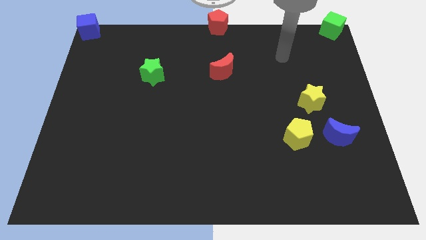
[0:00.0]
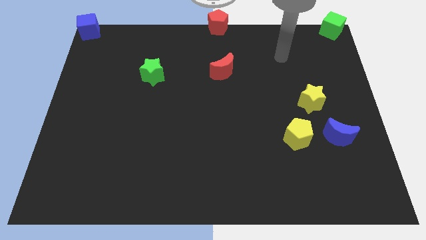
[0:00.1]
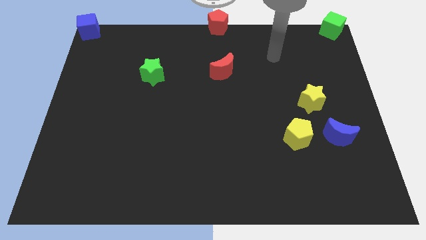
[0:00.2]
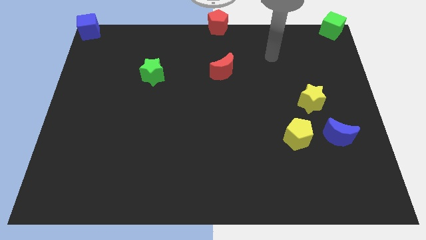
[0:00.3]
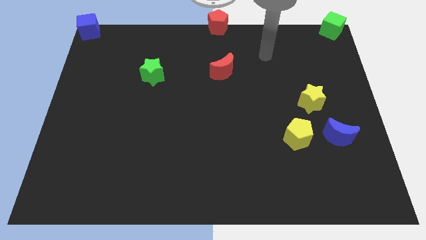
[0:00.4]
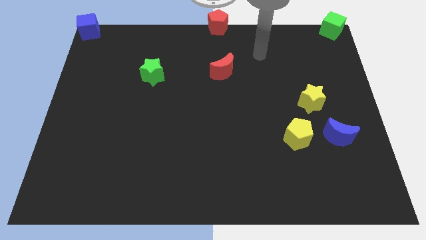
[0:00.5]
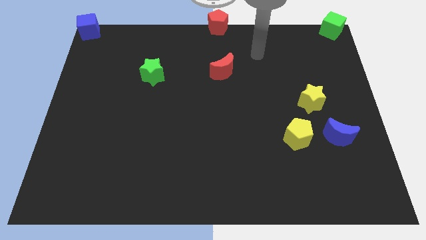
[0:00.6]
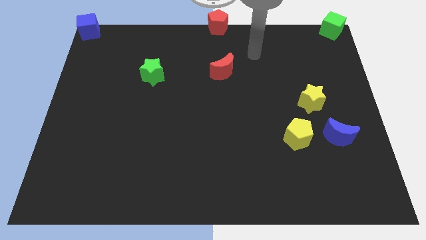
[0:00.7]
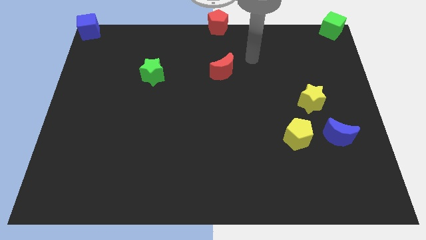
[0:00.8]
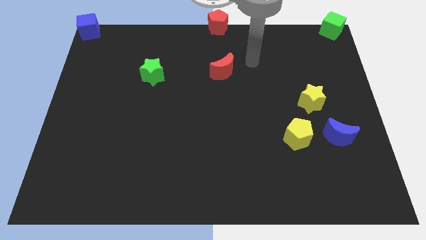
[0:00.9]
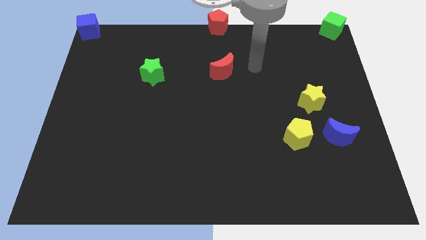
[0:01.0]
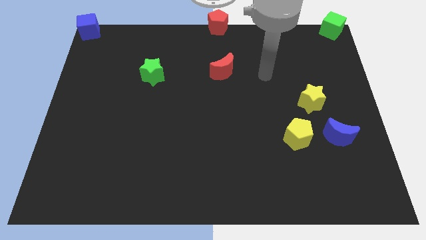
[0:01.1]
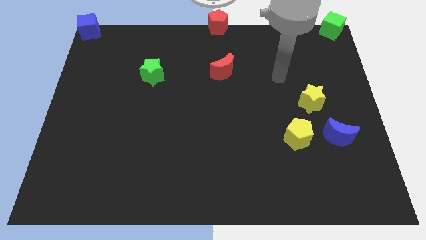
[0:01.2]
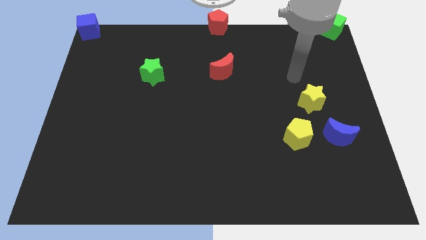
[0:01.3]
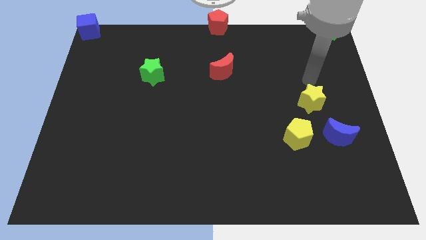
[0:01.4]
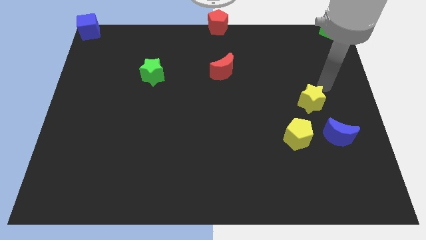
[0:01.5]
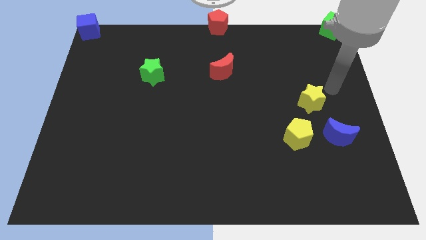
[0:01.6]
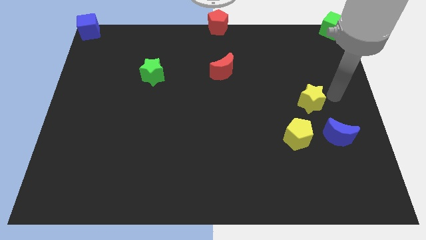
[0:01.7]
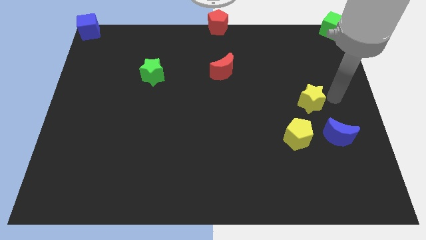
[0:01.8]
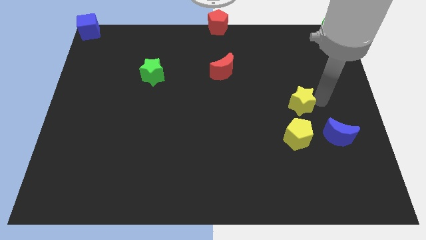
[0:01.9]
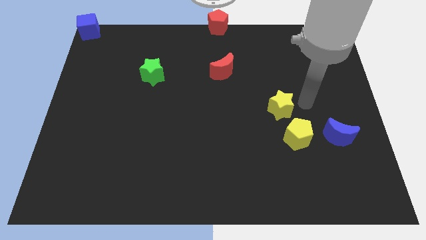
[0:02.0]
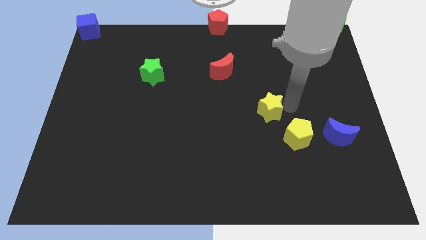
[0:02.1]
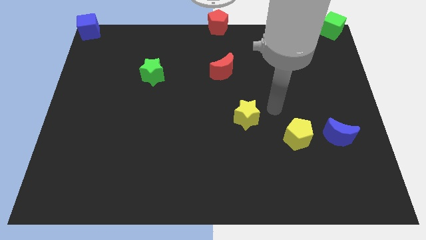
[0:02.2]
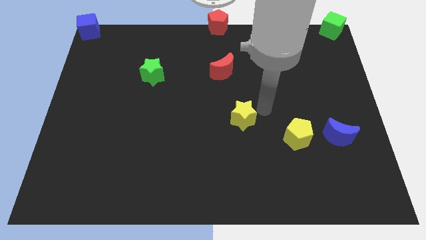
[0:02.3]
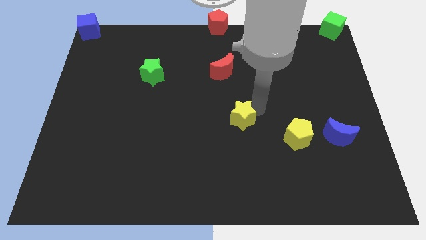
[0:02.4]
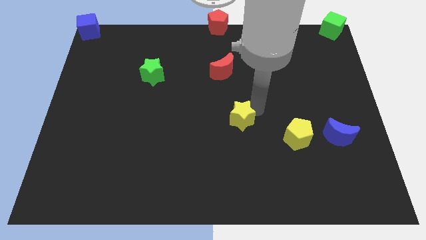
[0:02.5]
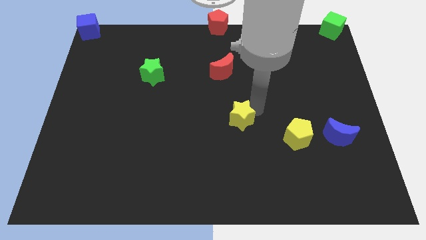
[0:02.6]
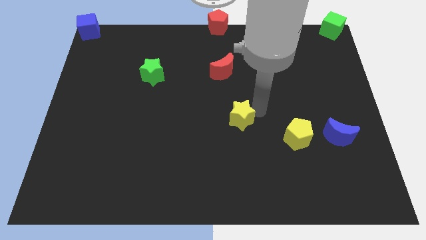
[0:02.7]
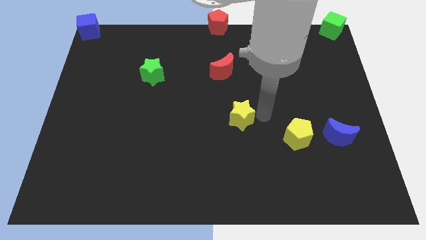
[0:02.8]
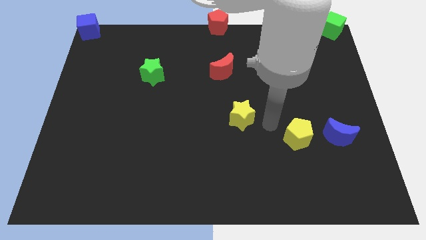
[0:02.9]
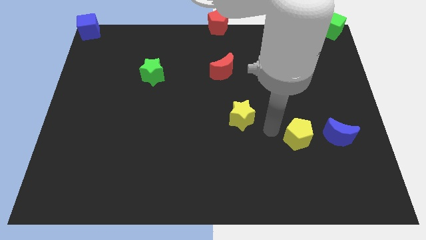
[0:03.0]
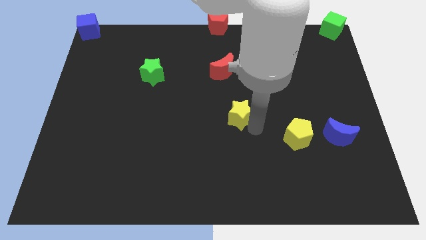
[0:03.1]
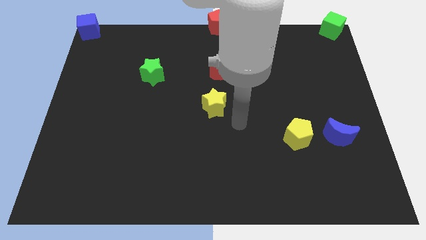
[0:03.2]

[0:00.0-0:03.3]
place the yellow star down to the red moon

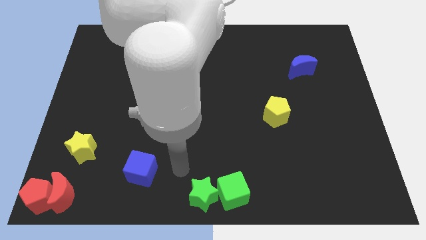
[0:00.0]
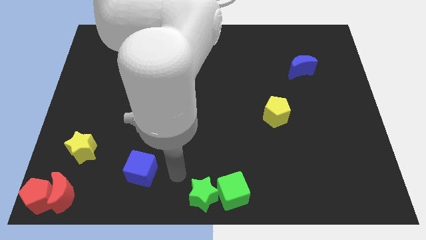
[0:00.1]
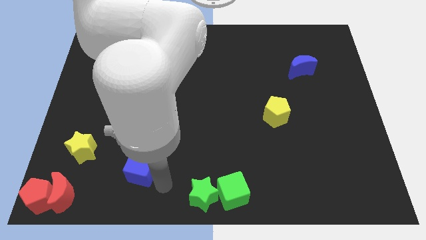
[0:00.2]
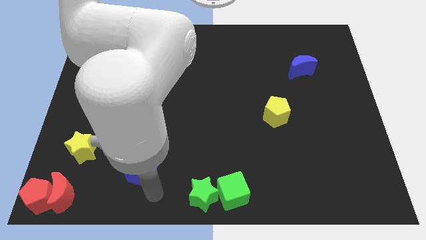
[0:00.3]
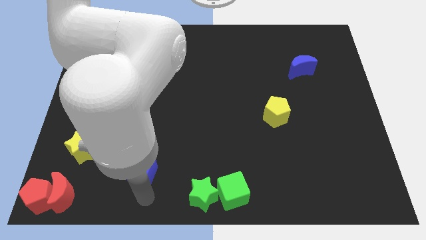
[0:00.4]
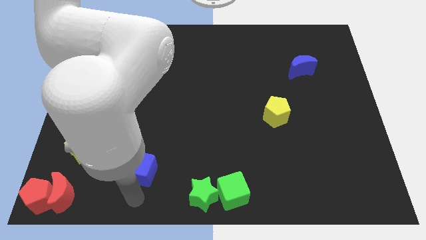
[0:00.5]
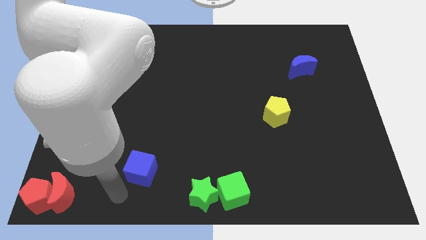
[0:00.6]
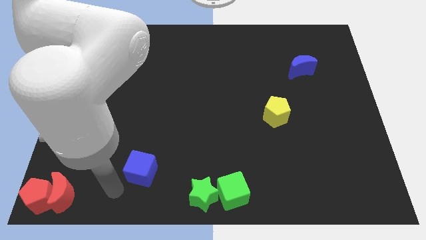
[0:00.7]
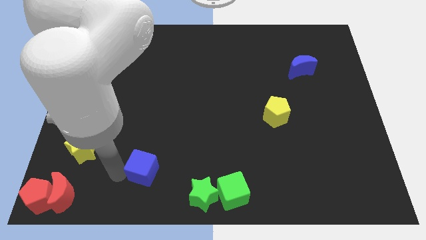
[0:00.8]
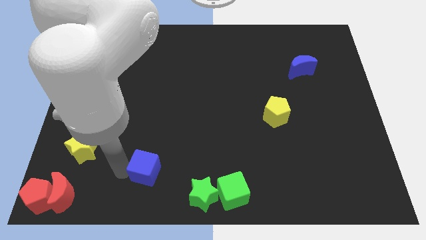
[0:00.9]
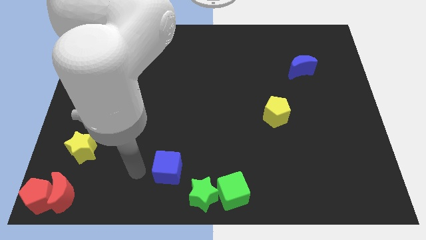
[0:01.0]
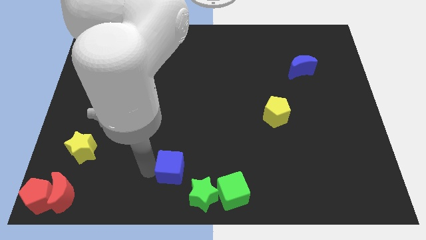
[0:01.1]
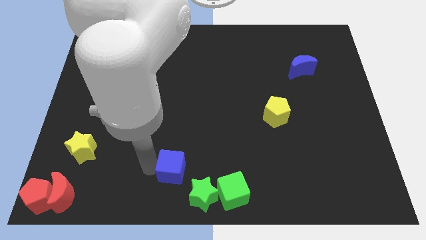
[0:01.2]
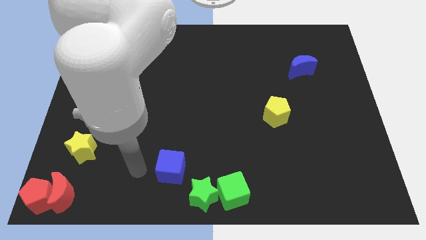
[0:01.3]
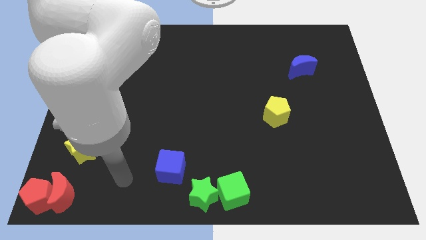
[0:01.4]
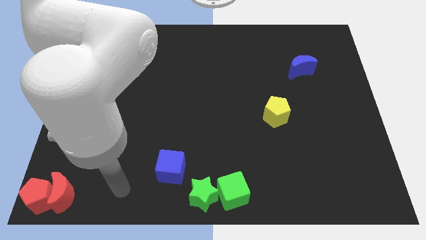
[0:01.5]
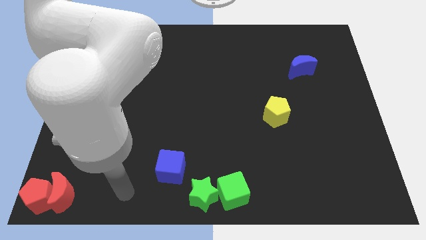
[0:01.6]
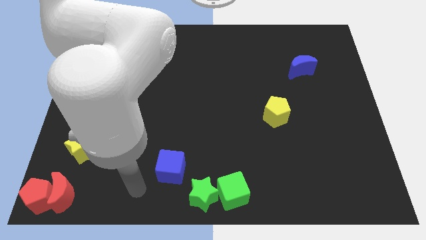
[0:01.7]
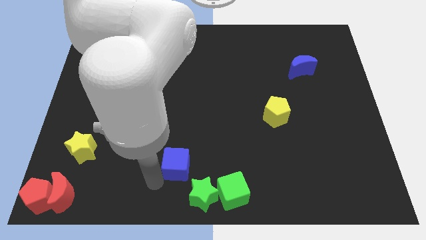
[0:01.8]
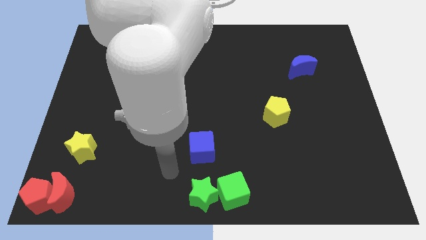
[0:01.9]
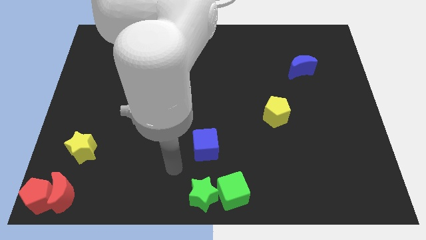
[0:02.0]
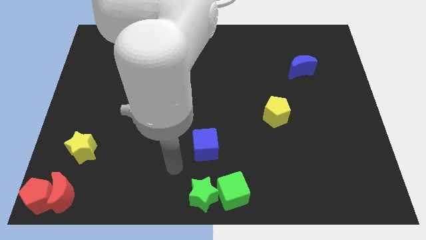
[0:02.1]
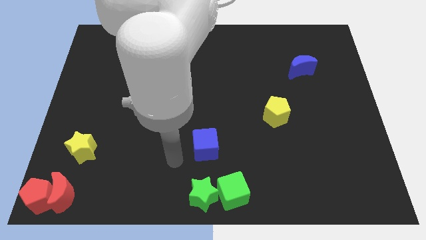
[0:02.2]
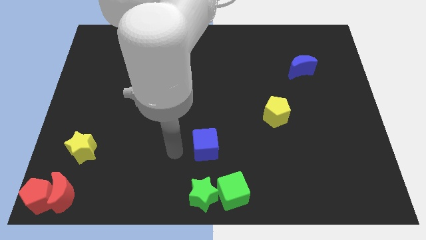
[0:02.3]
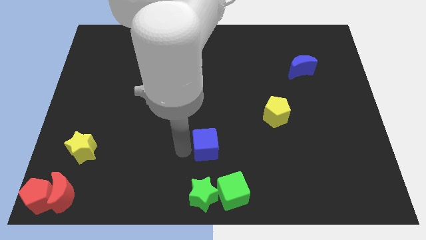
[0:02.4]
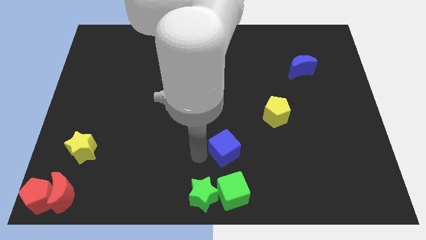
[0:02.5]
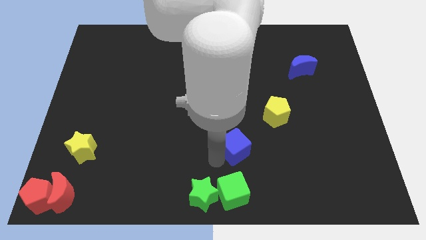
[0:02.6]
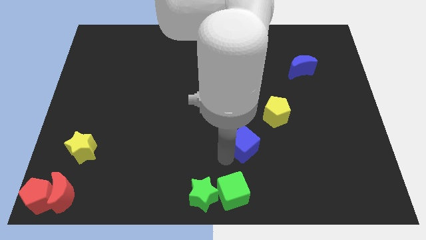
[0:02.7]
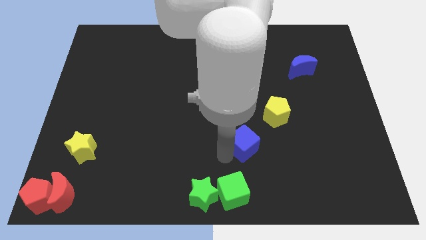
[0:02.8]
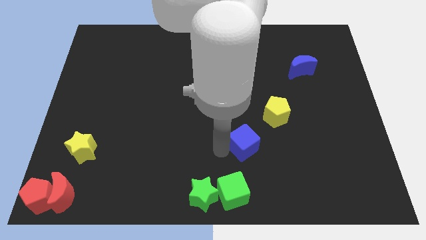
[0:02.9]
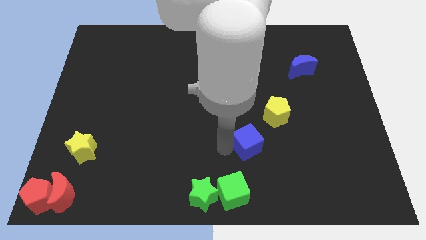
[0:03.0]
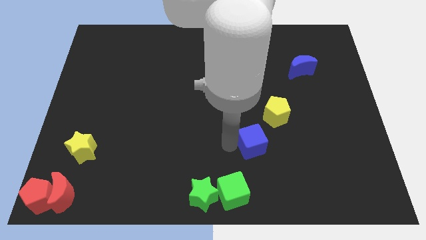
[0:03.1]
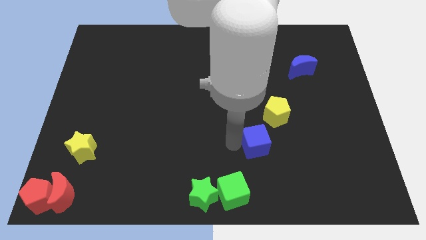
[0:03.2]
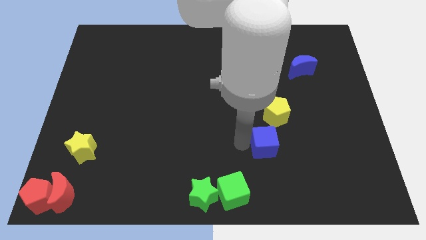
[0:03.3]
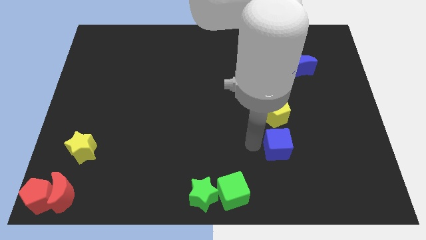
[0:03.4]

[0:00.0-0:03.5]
place blue cube below yellow pentagon

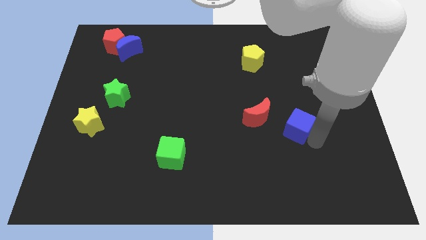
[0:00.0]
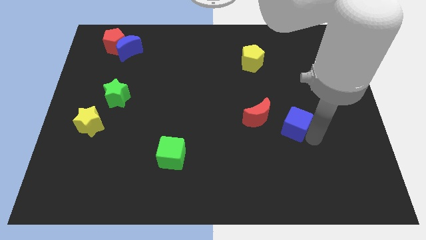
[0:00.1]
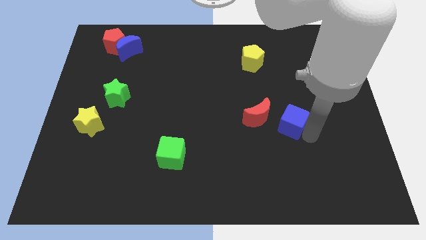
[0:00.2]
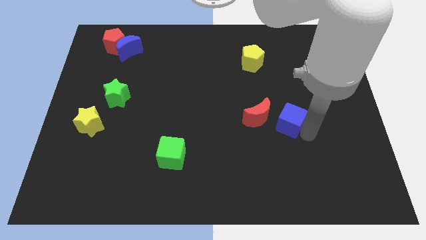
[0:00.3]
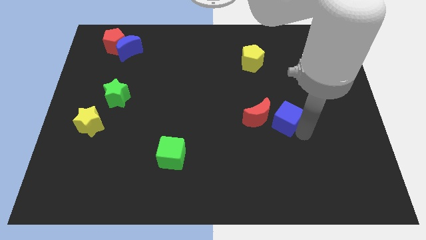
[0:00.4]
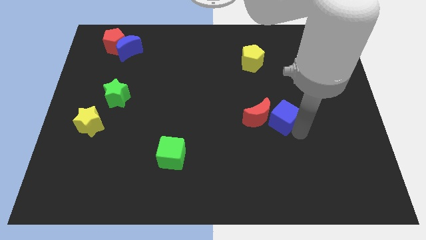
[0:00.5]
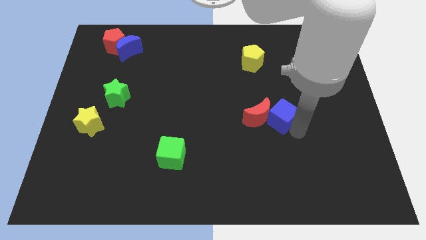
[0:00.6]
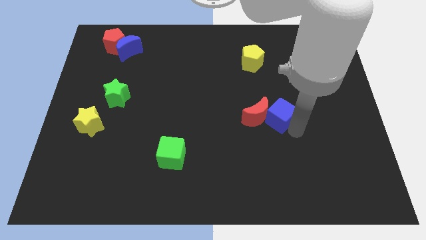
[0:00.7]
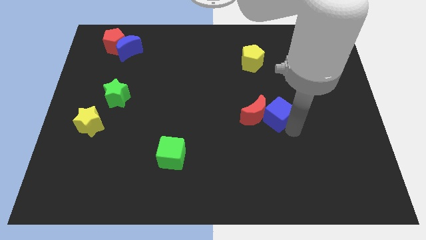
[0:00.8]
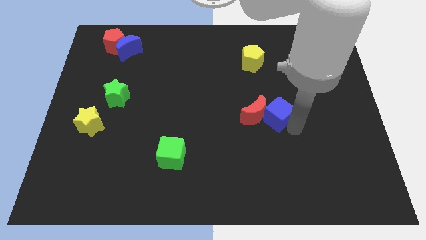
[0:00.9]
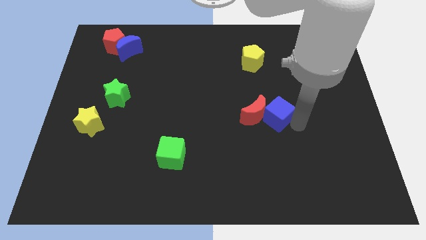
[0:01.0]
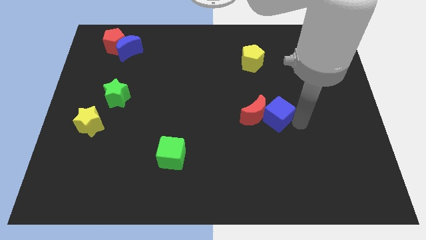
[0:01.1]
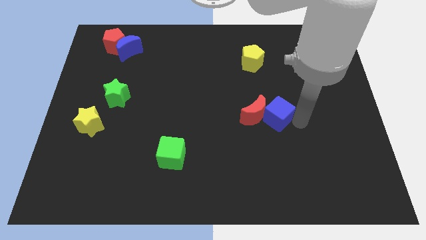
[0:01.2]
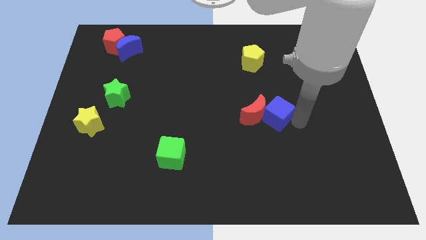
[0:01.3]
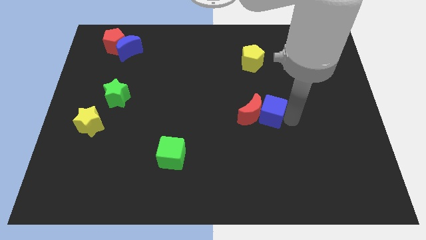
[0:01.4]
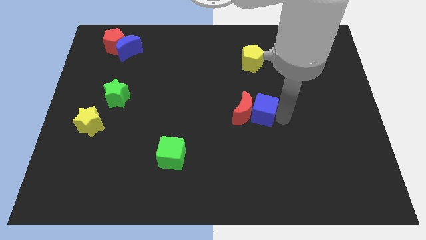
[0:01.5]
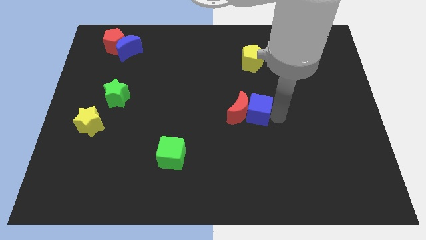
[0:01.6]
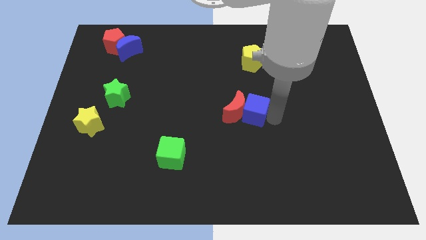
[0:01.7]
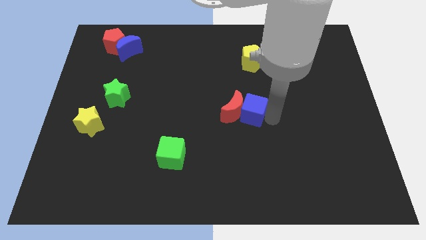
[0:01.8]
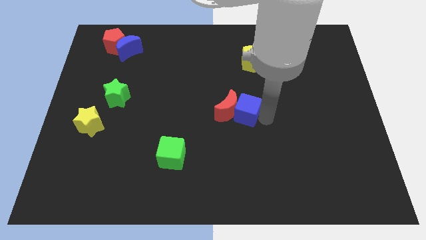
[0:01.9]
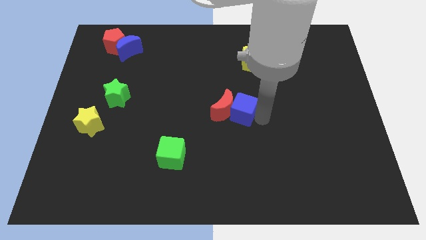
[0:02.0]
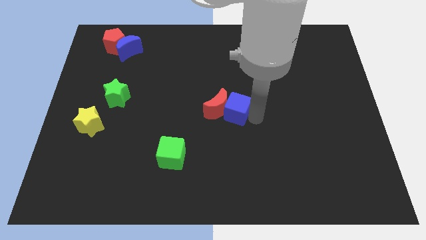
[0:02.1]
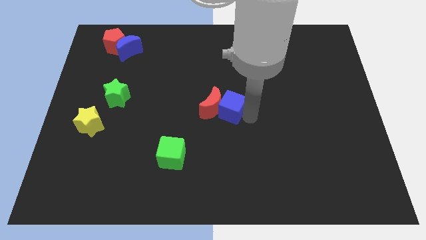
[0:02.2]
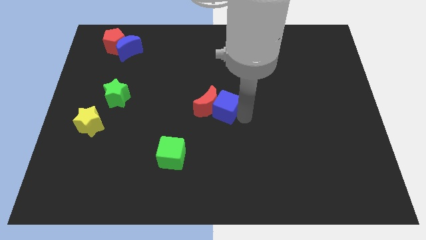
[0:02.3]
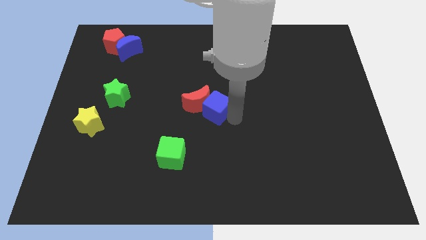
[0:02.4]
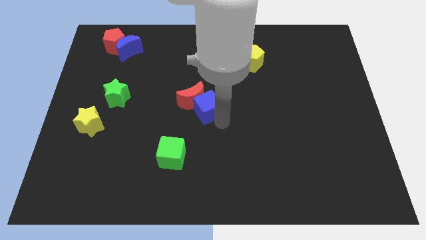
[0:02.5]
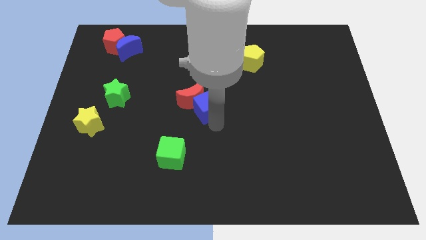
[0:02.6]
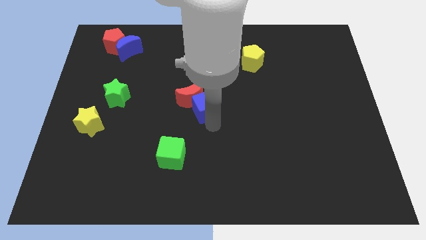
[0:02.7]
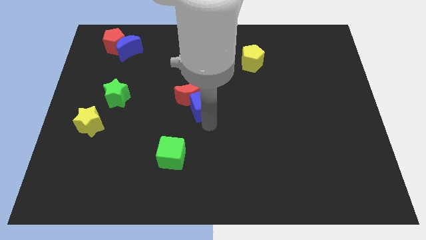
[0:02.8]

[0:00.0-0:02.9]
push the red crescent and the blue cube to the center of the board
